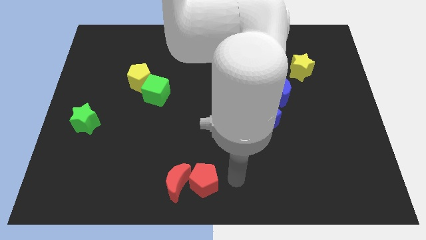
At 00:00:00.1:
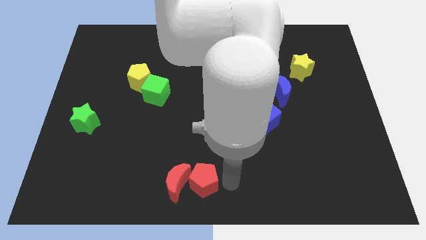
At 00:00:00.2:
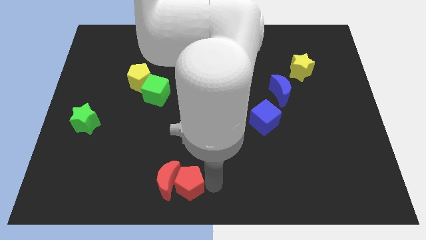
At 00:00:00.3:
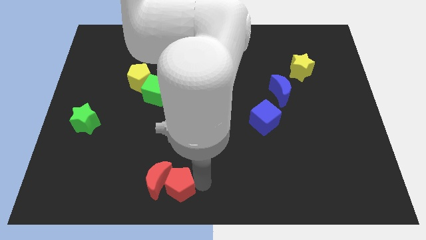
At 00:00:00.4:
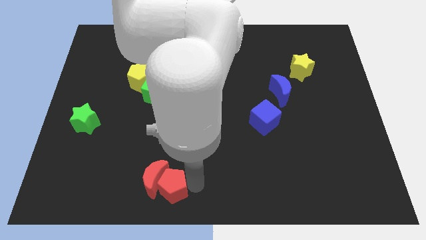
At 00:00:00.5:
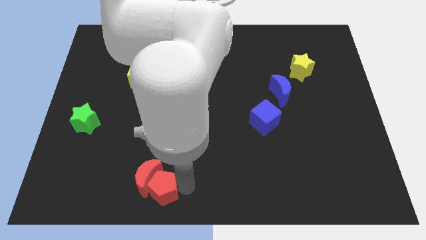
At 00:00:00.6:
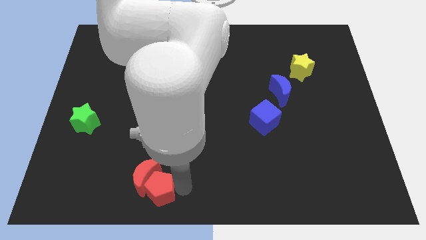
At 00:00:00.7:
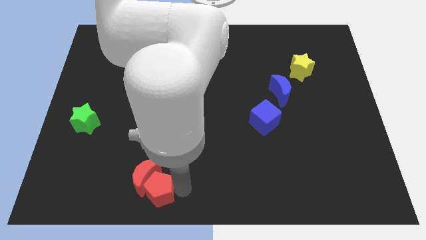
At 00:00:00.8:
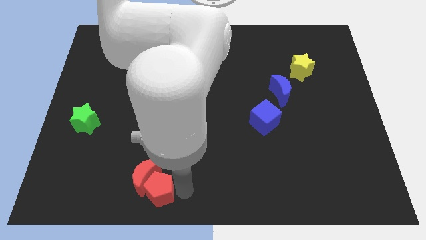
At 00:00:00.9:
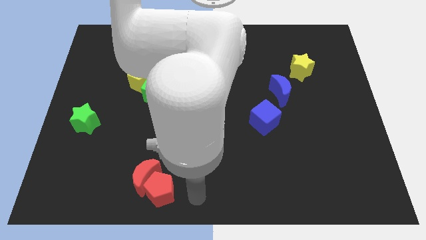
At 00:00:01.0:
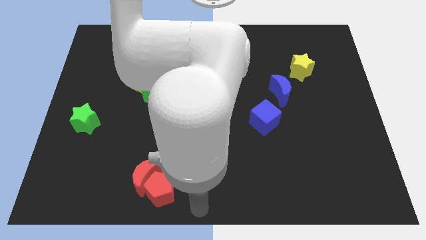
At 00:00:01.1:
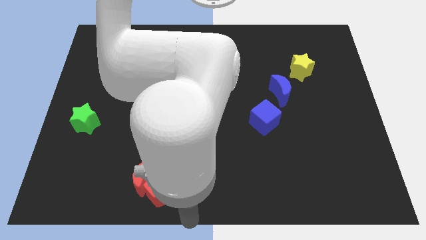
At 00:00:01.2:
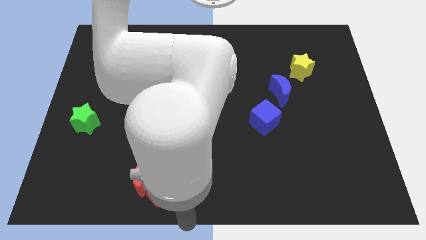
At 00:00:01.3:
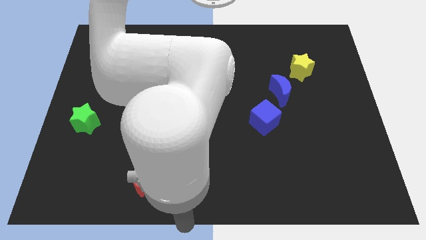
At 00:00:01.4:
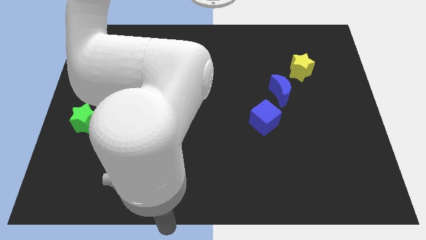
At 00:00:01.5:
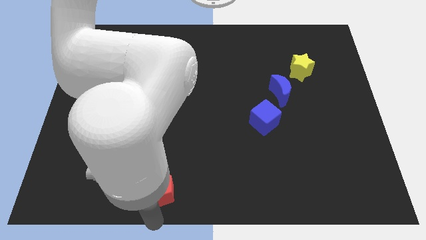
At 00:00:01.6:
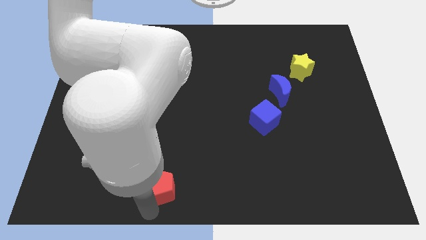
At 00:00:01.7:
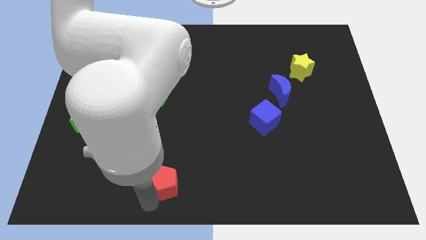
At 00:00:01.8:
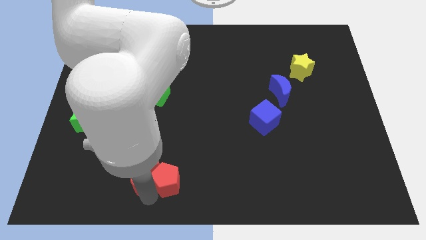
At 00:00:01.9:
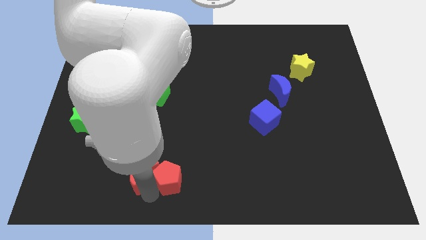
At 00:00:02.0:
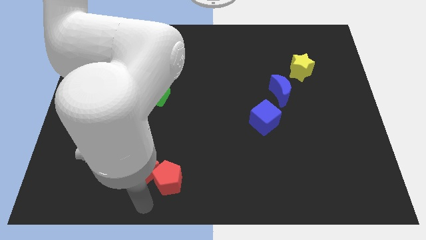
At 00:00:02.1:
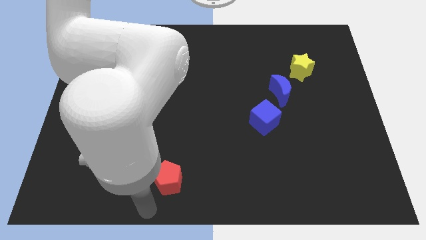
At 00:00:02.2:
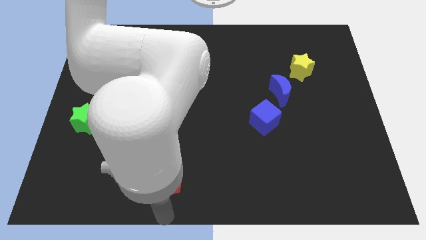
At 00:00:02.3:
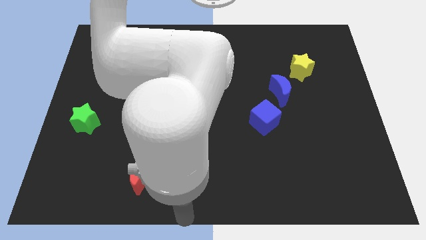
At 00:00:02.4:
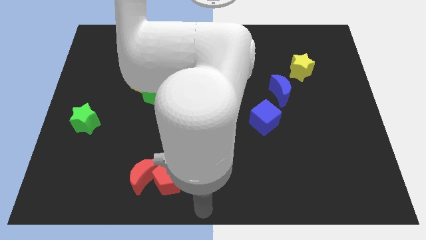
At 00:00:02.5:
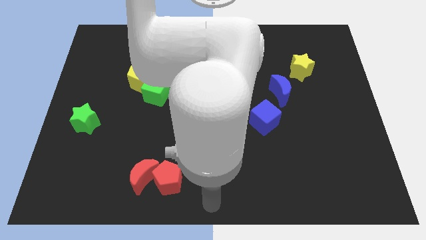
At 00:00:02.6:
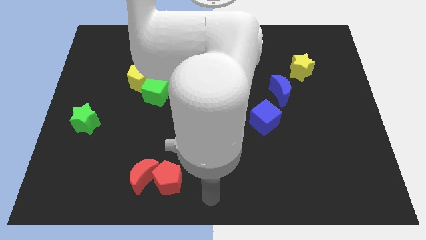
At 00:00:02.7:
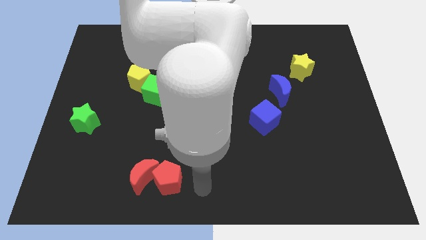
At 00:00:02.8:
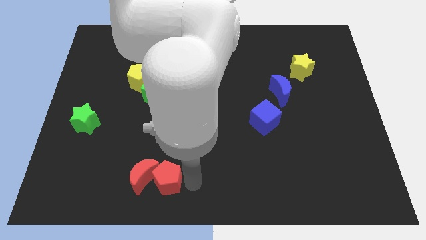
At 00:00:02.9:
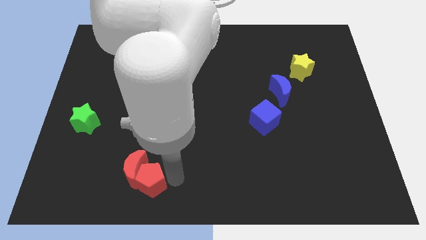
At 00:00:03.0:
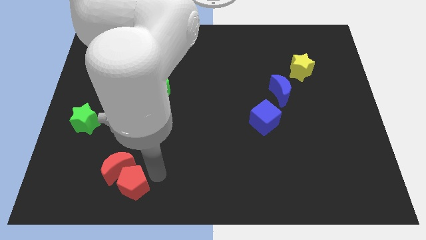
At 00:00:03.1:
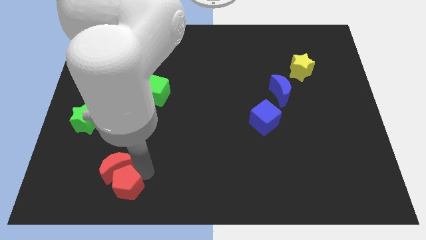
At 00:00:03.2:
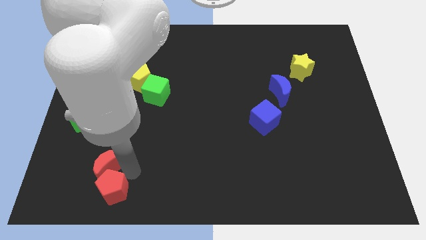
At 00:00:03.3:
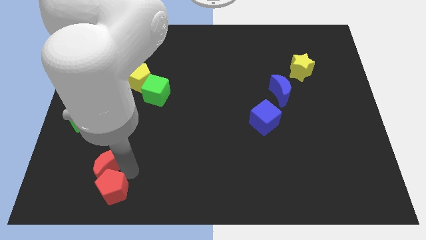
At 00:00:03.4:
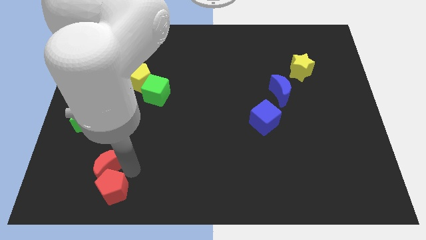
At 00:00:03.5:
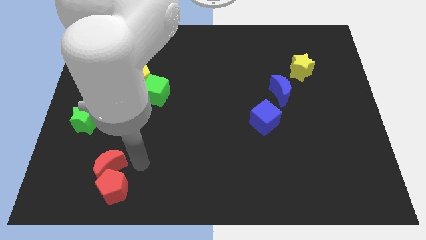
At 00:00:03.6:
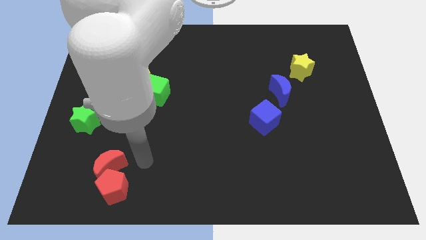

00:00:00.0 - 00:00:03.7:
push the red blocks below the green cube

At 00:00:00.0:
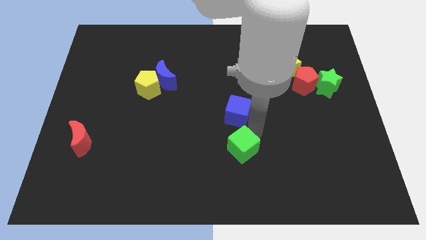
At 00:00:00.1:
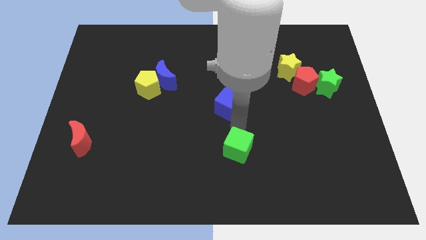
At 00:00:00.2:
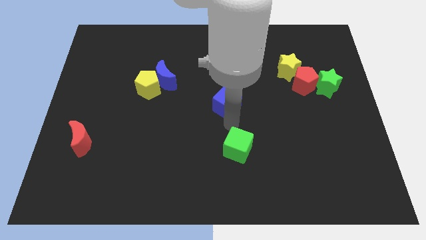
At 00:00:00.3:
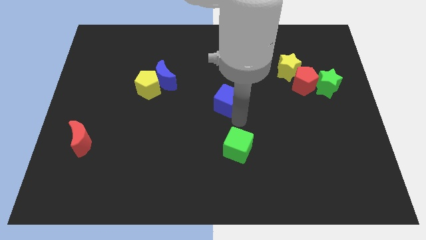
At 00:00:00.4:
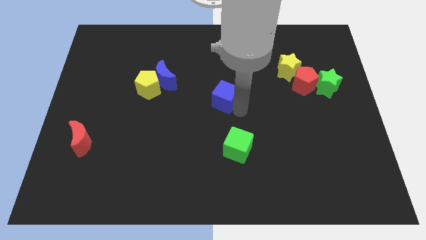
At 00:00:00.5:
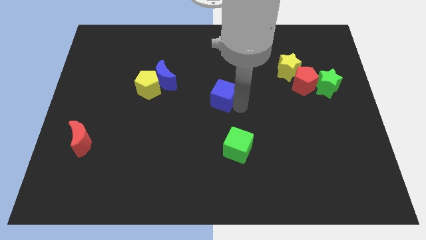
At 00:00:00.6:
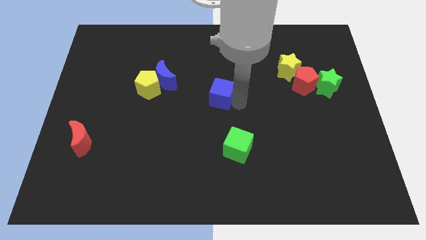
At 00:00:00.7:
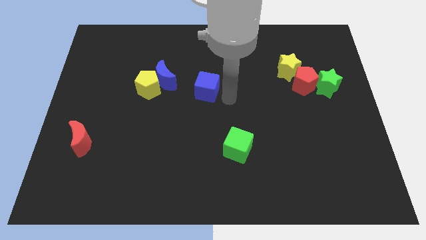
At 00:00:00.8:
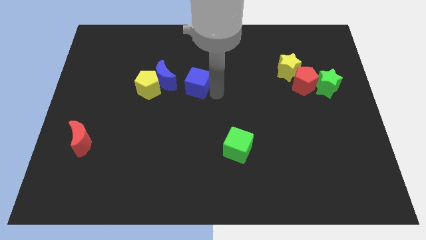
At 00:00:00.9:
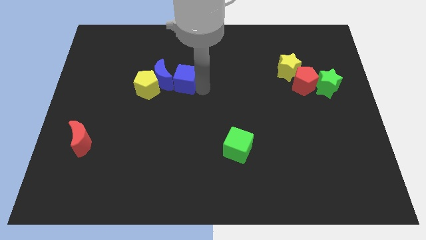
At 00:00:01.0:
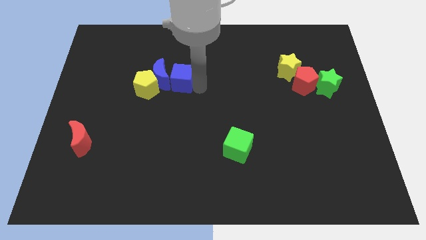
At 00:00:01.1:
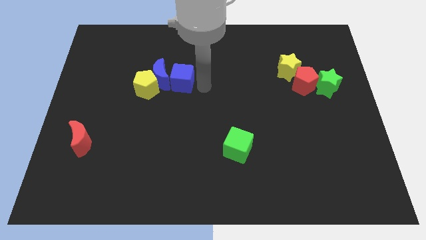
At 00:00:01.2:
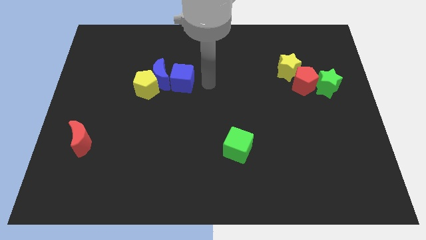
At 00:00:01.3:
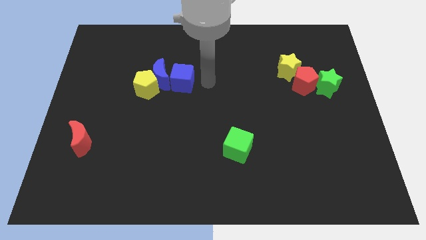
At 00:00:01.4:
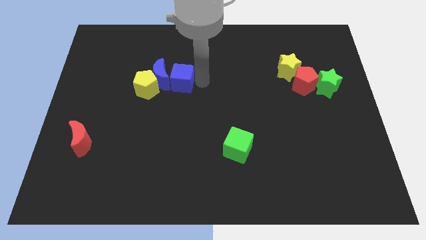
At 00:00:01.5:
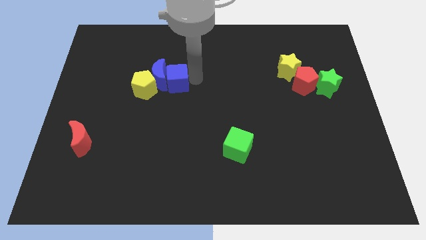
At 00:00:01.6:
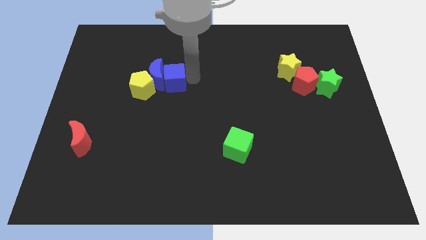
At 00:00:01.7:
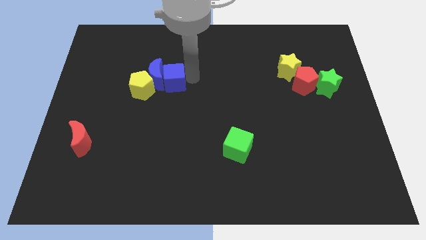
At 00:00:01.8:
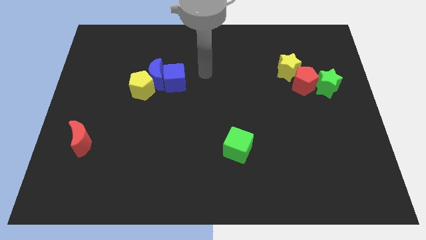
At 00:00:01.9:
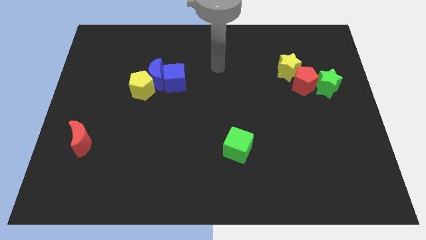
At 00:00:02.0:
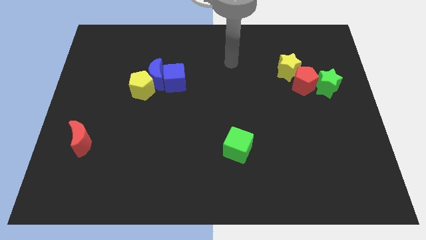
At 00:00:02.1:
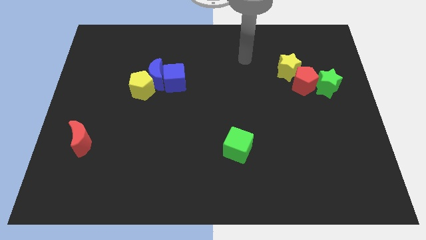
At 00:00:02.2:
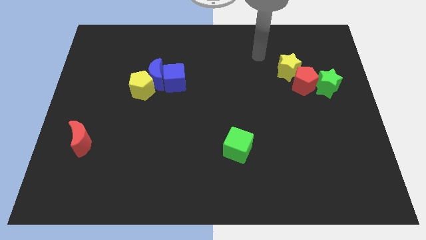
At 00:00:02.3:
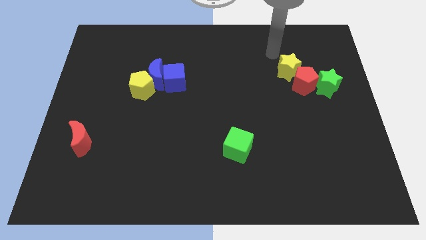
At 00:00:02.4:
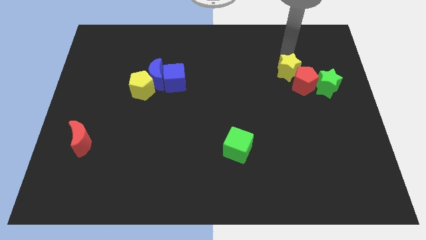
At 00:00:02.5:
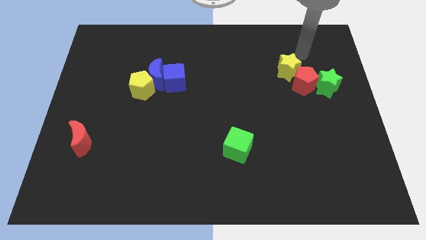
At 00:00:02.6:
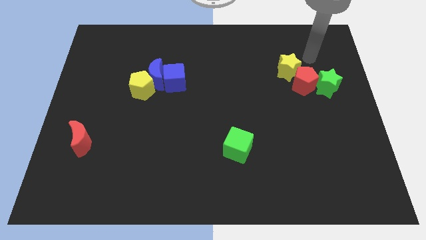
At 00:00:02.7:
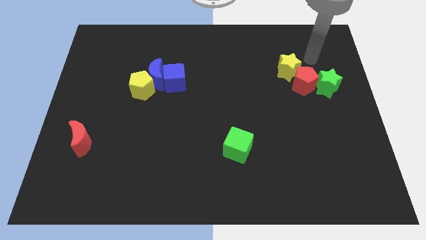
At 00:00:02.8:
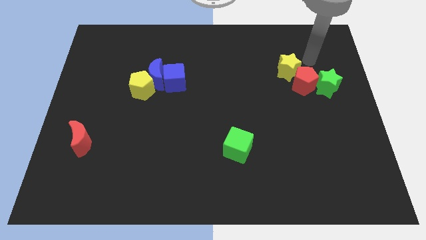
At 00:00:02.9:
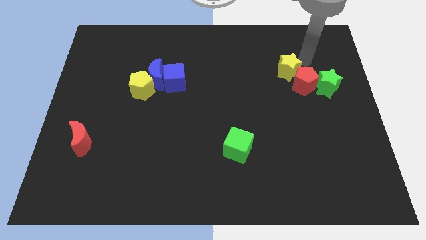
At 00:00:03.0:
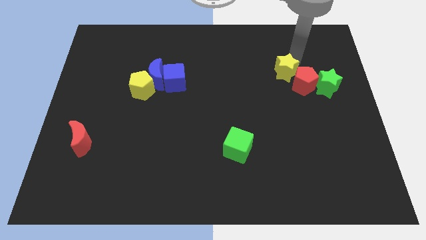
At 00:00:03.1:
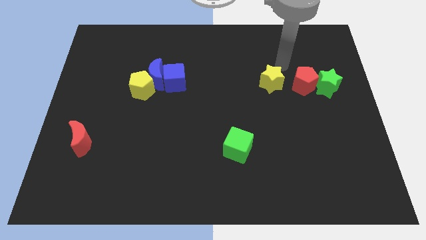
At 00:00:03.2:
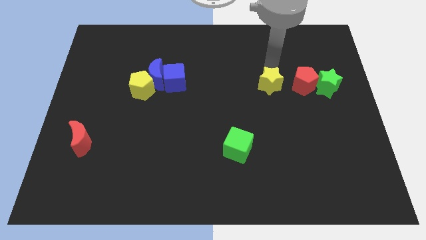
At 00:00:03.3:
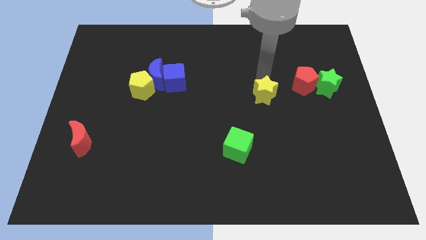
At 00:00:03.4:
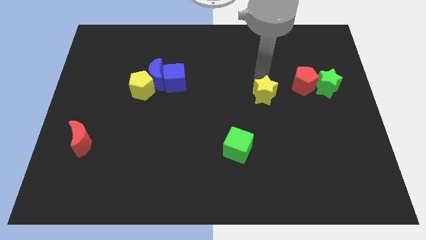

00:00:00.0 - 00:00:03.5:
place blue cube right side to the blue crescent

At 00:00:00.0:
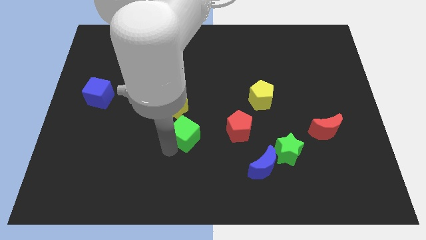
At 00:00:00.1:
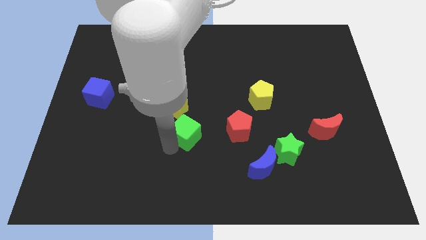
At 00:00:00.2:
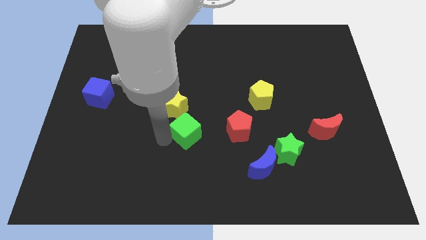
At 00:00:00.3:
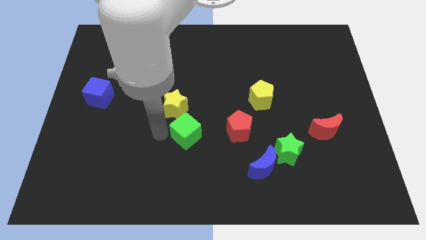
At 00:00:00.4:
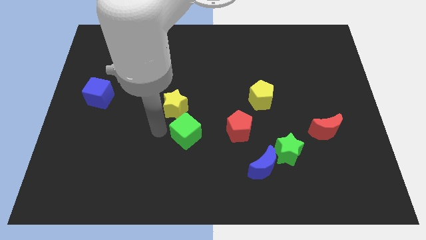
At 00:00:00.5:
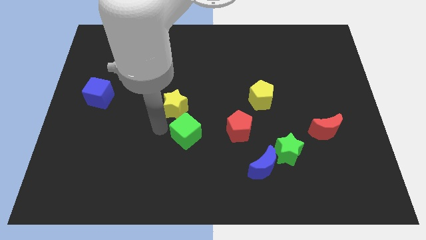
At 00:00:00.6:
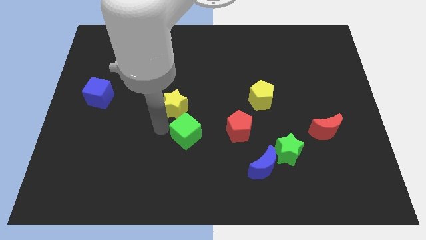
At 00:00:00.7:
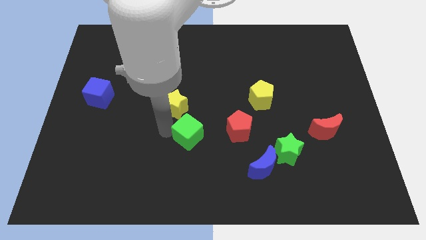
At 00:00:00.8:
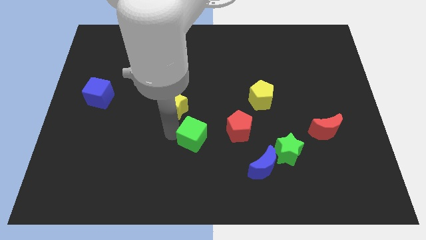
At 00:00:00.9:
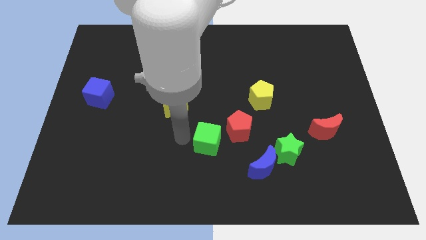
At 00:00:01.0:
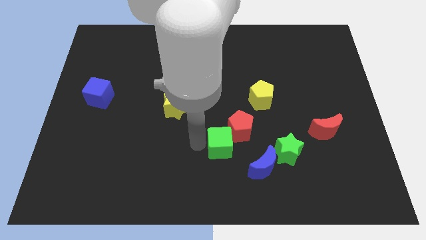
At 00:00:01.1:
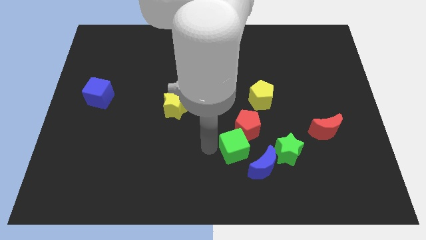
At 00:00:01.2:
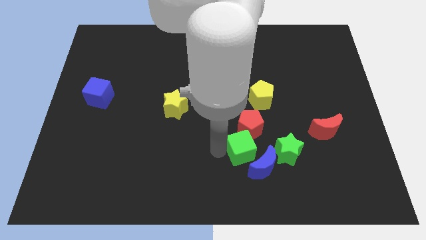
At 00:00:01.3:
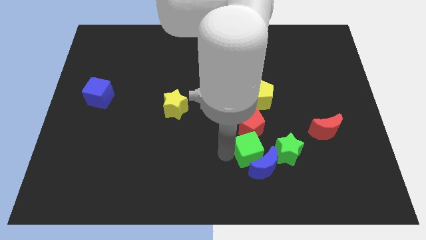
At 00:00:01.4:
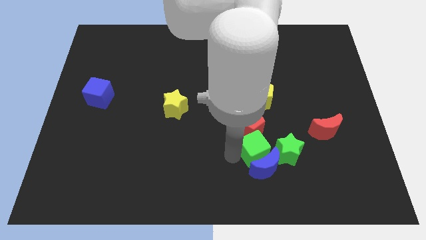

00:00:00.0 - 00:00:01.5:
push the green cube into the blue moon
